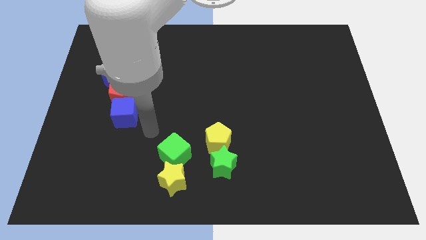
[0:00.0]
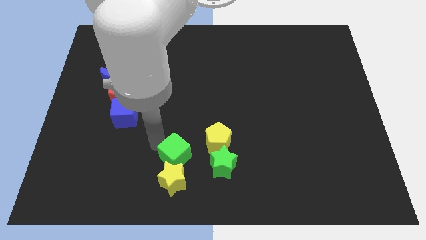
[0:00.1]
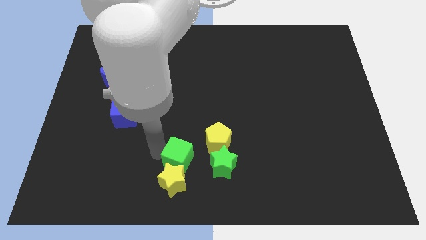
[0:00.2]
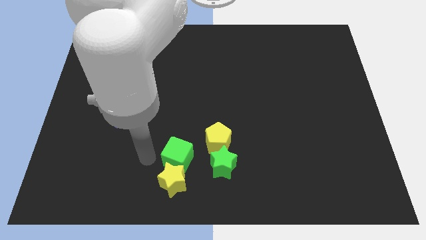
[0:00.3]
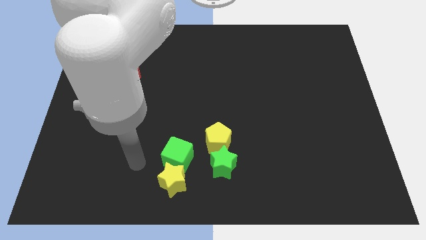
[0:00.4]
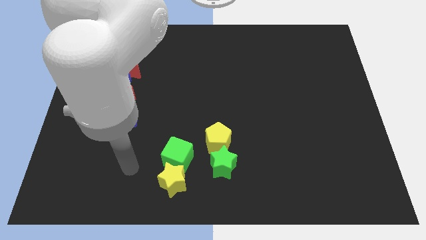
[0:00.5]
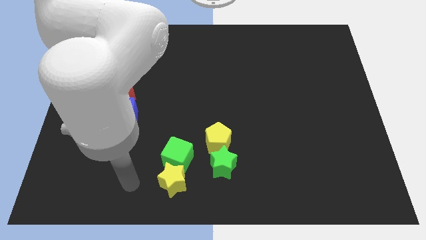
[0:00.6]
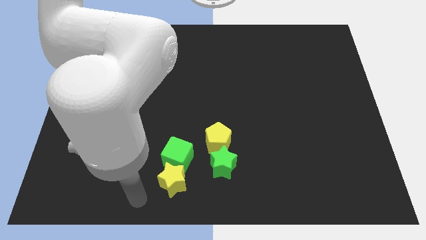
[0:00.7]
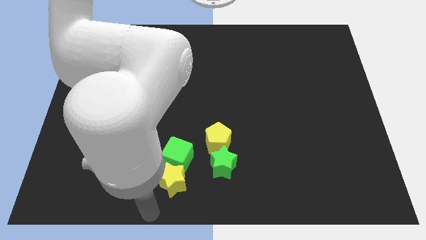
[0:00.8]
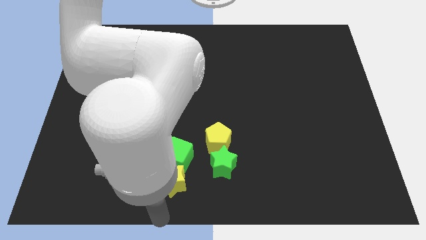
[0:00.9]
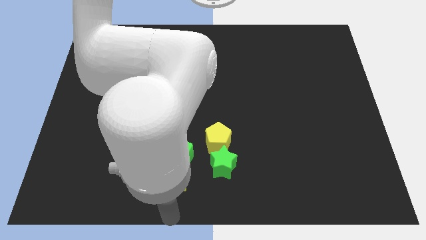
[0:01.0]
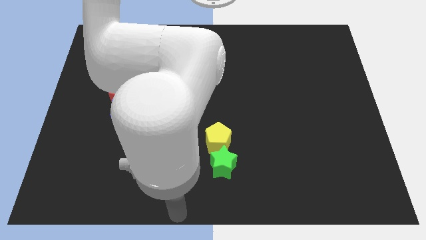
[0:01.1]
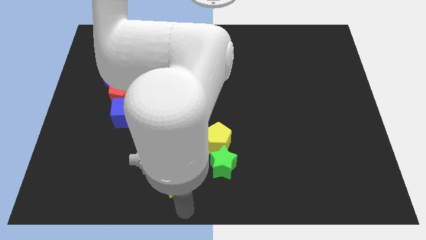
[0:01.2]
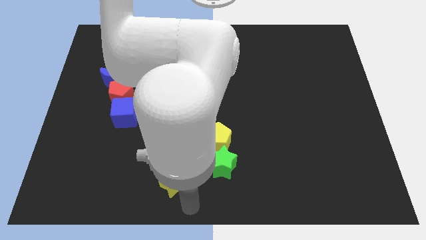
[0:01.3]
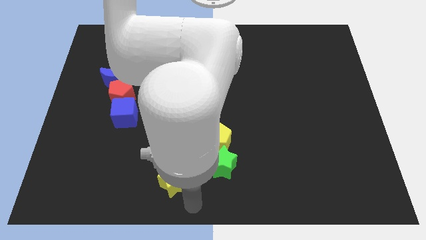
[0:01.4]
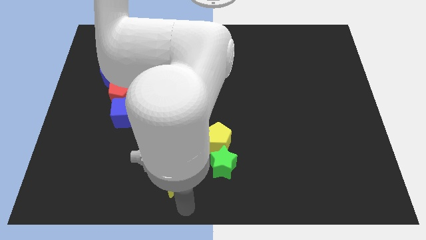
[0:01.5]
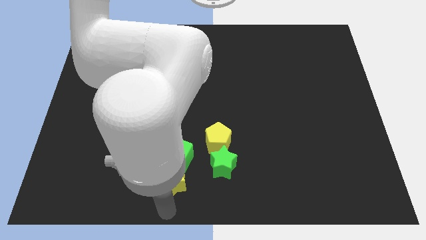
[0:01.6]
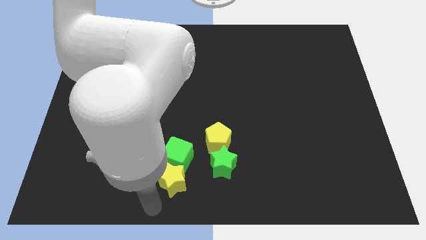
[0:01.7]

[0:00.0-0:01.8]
slightly adjust the green cube to the top of yellow star

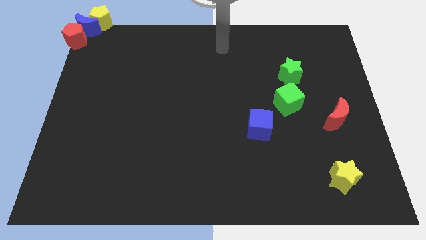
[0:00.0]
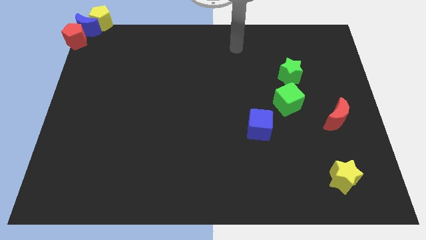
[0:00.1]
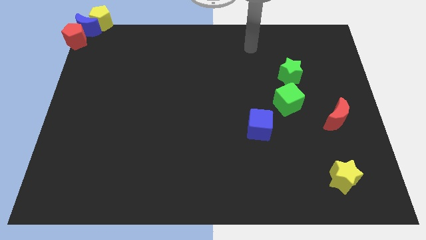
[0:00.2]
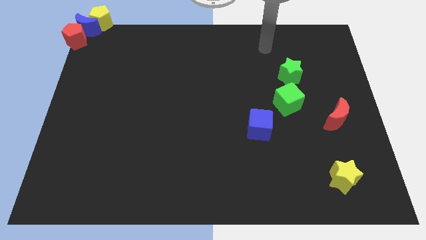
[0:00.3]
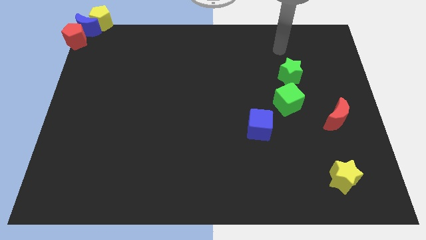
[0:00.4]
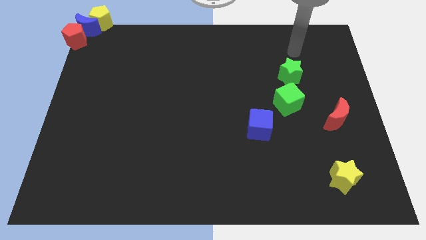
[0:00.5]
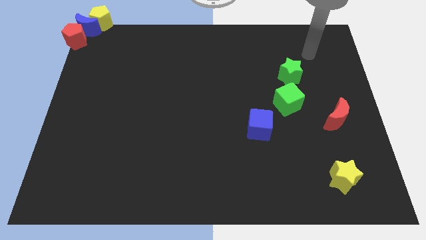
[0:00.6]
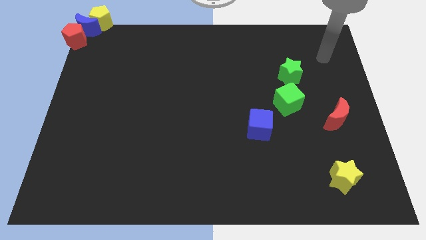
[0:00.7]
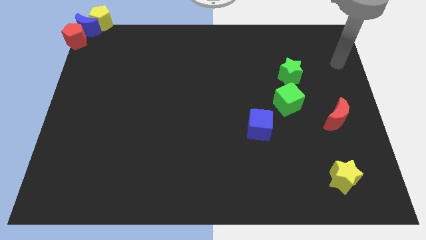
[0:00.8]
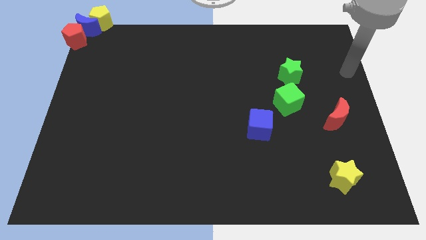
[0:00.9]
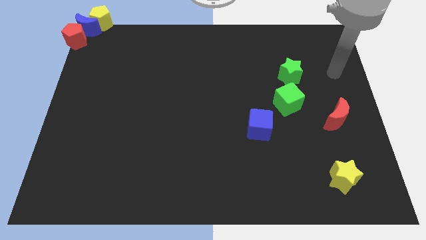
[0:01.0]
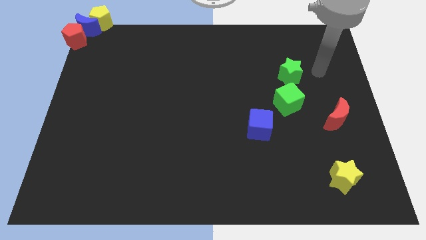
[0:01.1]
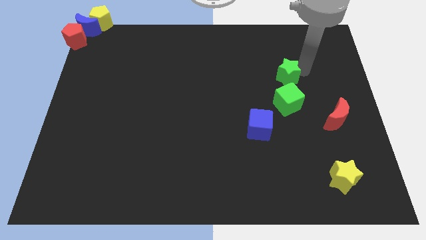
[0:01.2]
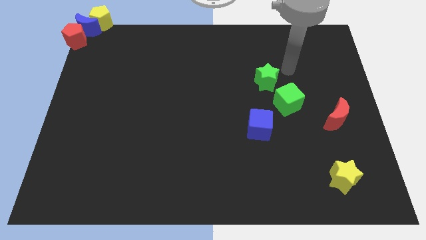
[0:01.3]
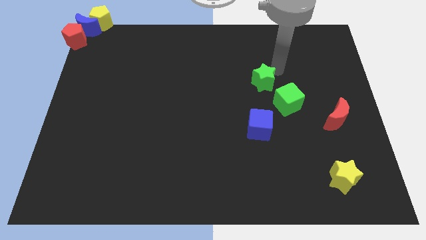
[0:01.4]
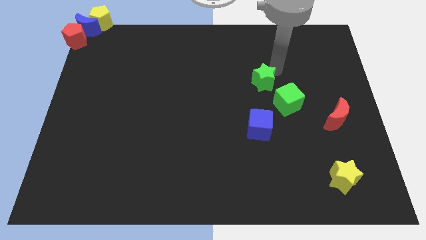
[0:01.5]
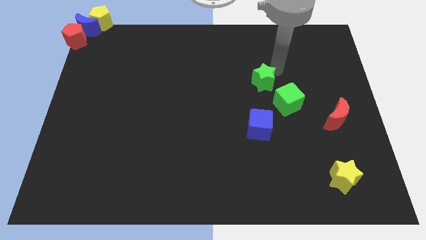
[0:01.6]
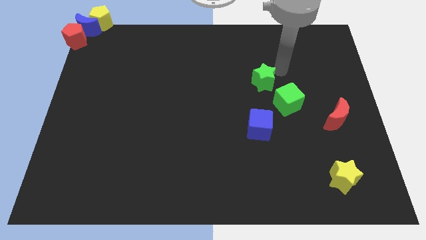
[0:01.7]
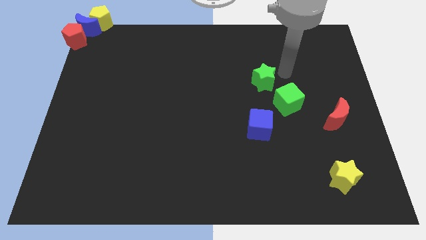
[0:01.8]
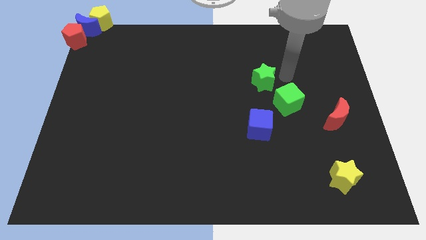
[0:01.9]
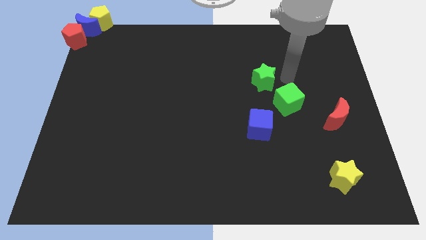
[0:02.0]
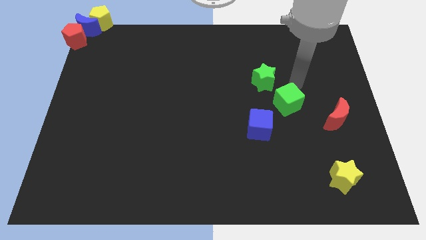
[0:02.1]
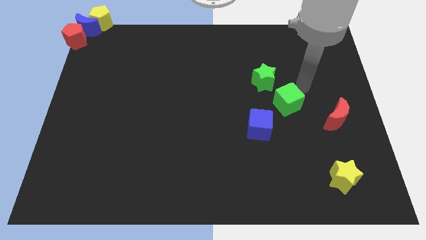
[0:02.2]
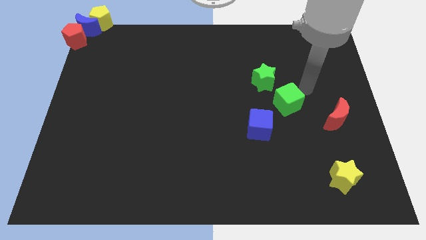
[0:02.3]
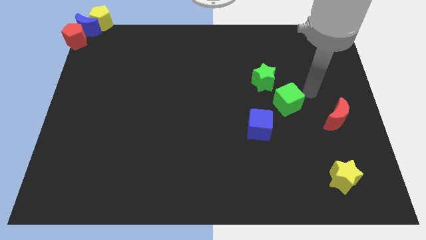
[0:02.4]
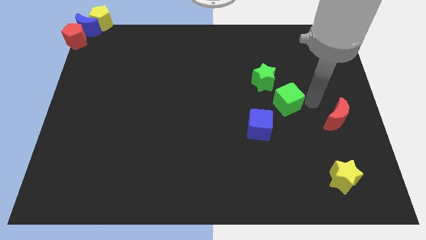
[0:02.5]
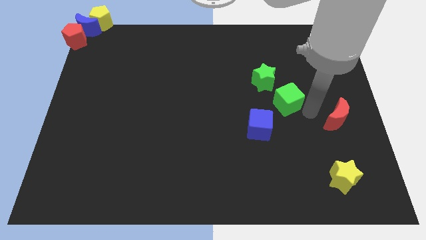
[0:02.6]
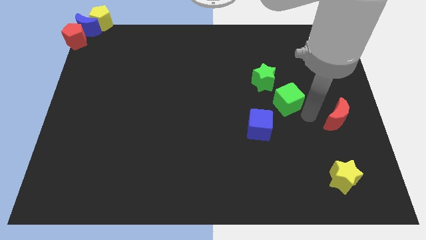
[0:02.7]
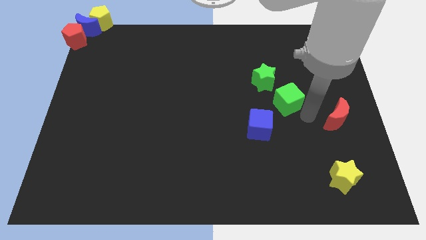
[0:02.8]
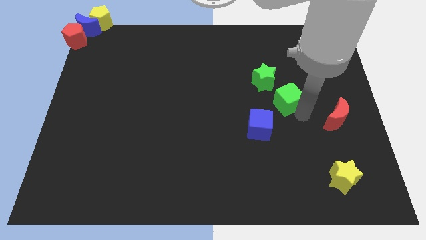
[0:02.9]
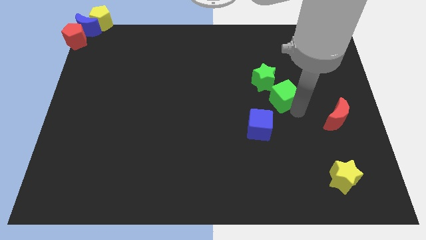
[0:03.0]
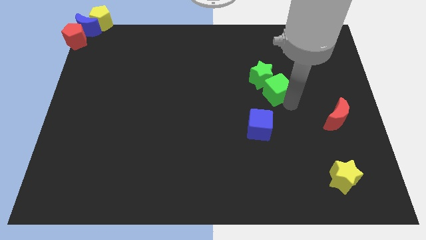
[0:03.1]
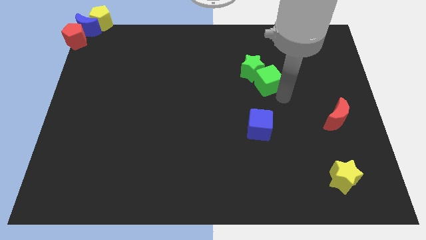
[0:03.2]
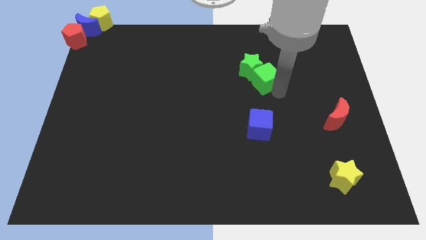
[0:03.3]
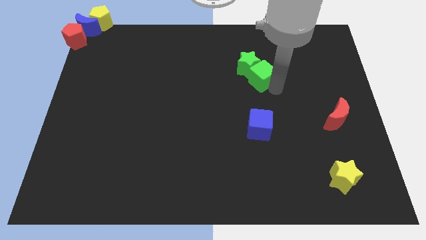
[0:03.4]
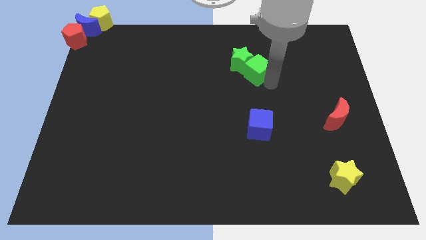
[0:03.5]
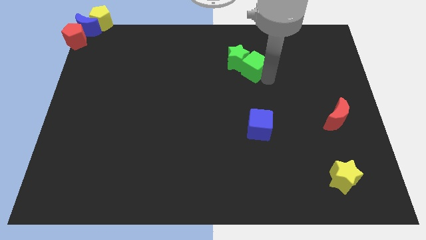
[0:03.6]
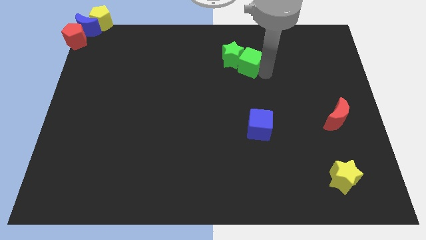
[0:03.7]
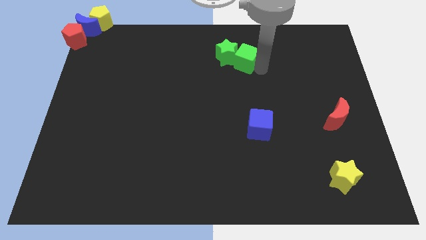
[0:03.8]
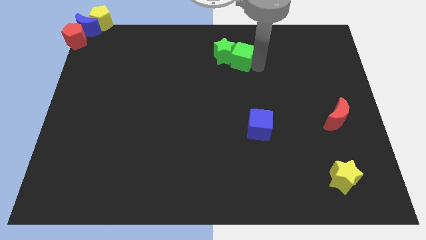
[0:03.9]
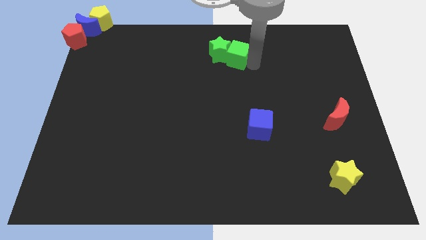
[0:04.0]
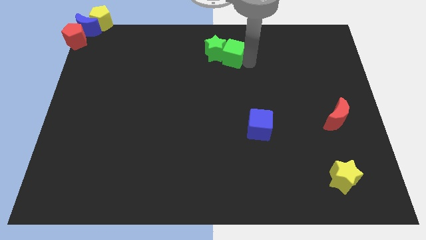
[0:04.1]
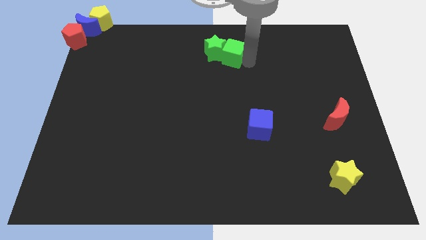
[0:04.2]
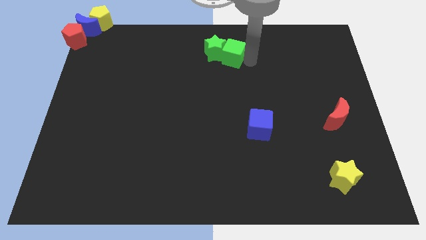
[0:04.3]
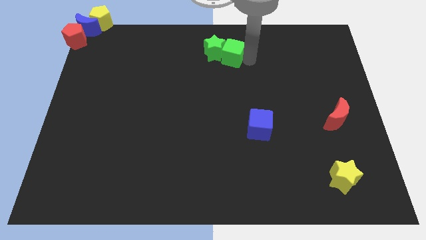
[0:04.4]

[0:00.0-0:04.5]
slide the green blocks towards the top center

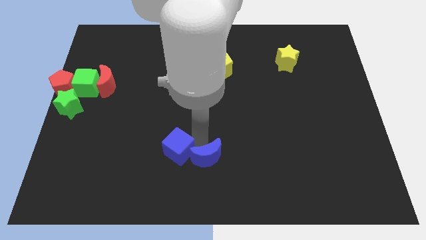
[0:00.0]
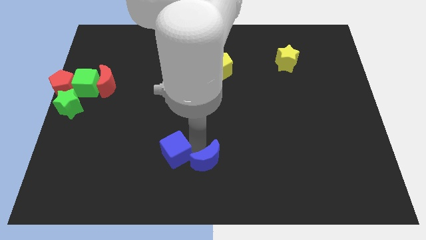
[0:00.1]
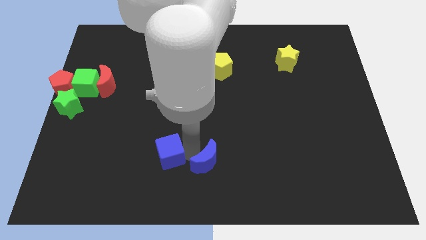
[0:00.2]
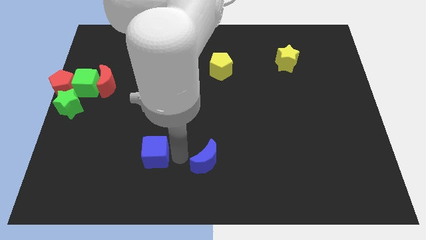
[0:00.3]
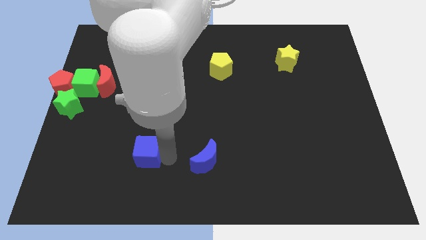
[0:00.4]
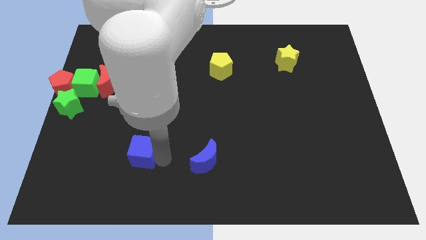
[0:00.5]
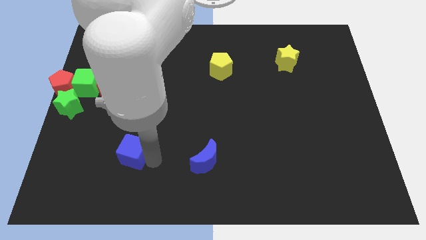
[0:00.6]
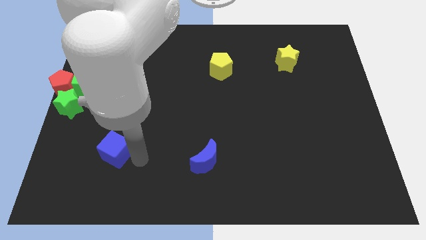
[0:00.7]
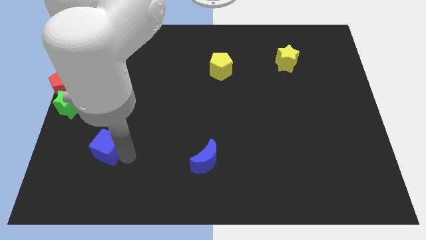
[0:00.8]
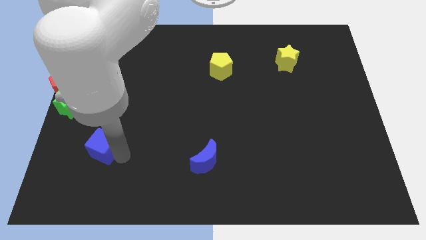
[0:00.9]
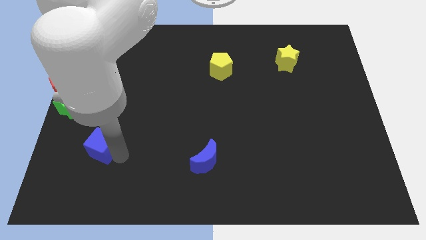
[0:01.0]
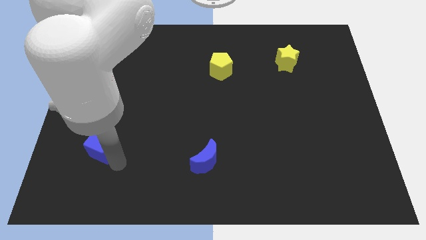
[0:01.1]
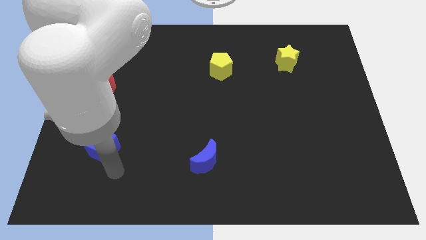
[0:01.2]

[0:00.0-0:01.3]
separate the blue moon and blue cube

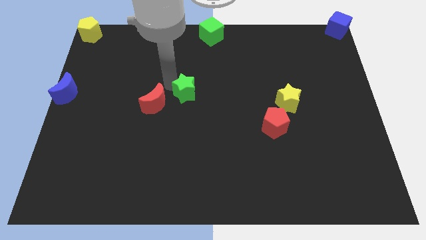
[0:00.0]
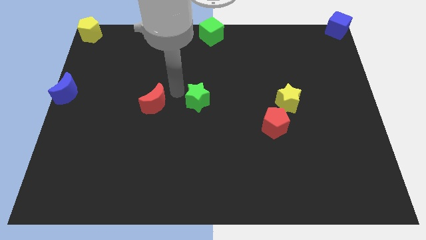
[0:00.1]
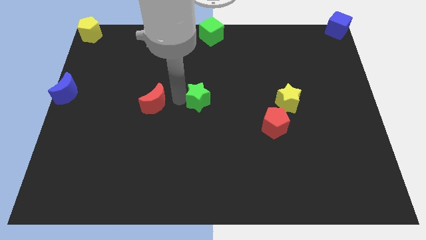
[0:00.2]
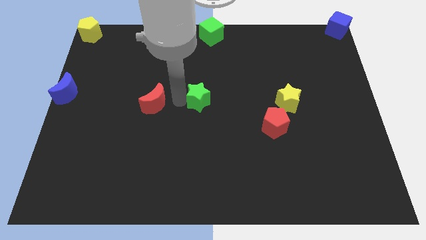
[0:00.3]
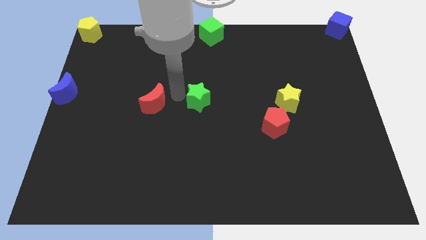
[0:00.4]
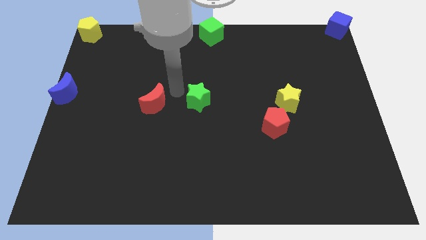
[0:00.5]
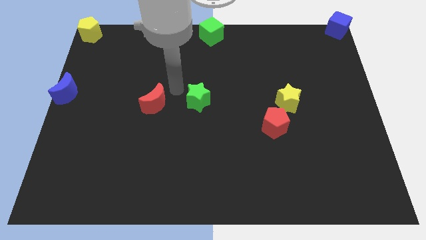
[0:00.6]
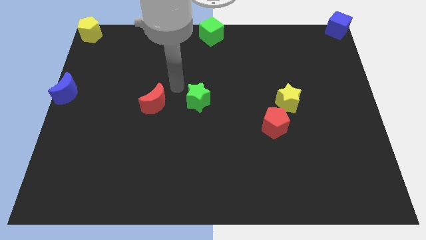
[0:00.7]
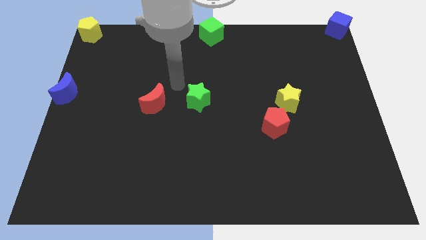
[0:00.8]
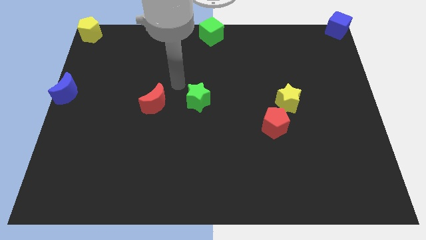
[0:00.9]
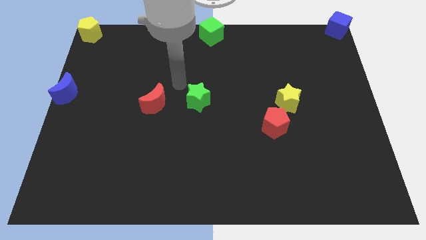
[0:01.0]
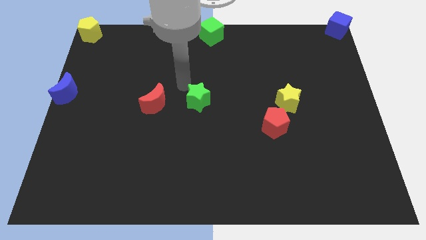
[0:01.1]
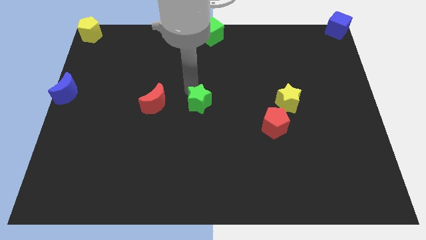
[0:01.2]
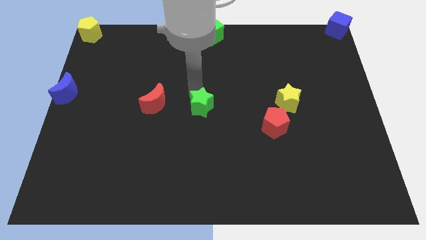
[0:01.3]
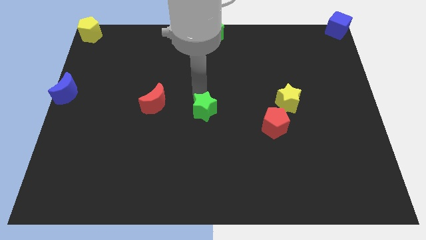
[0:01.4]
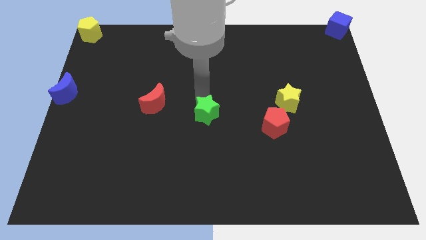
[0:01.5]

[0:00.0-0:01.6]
place green star at the center of the board
